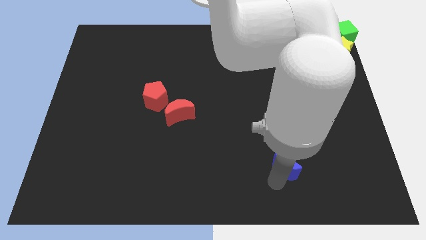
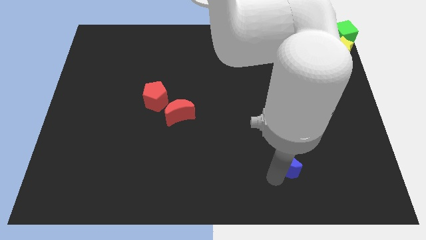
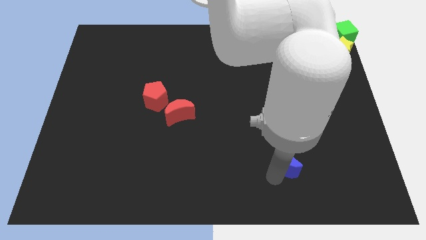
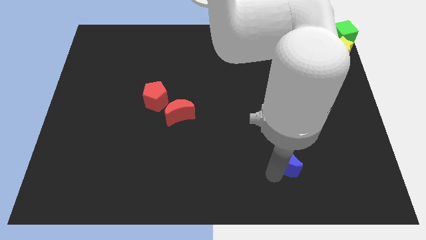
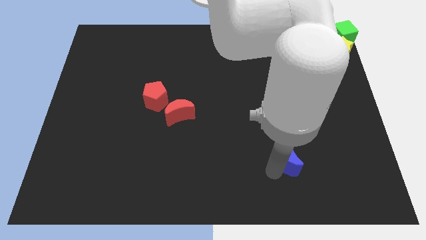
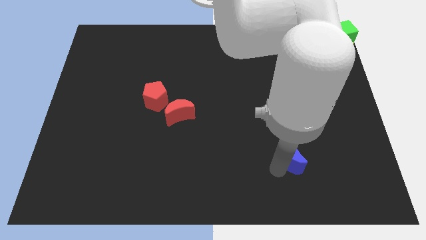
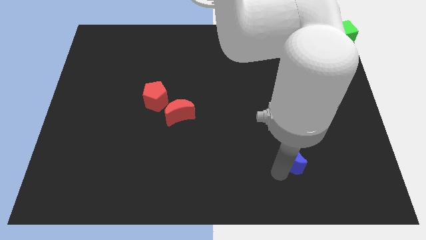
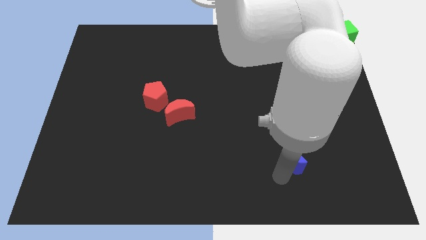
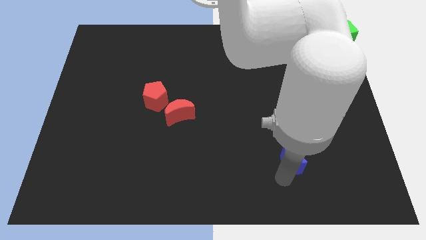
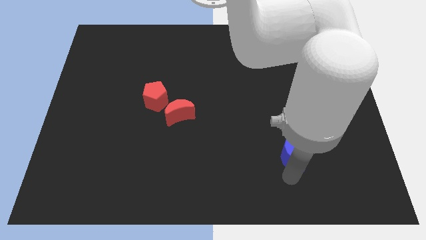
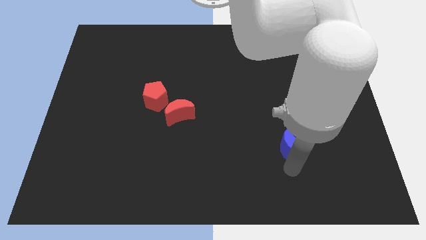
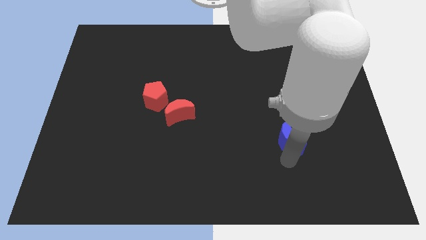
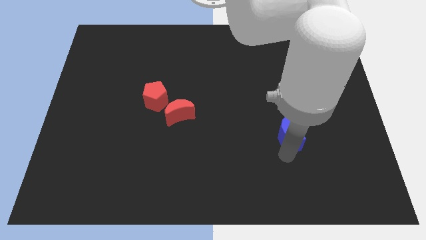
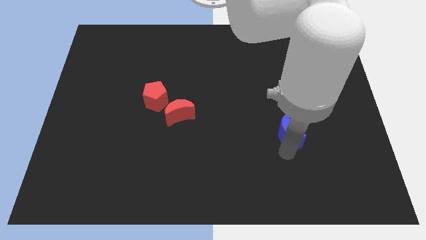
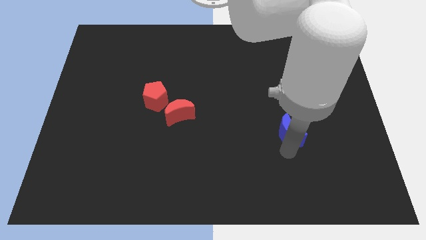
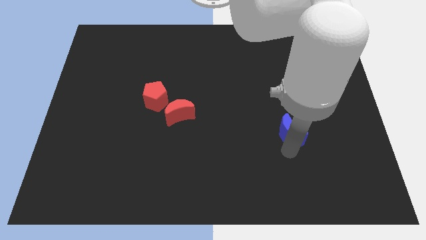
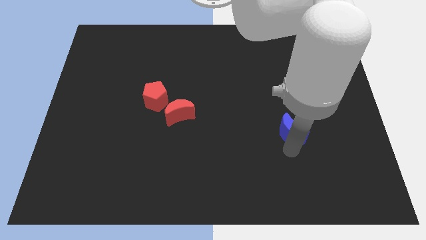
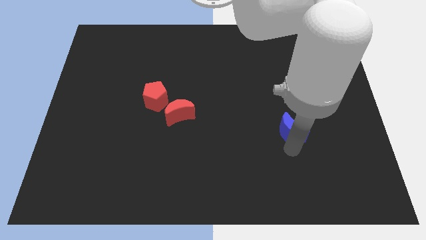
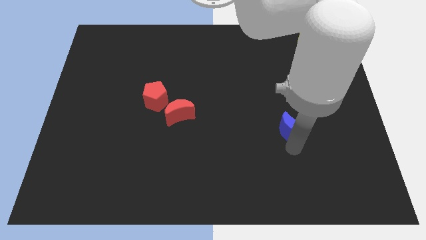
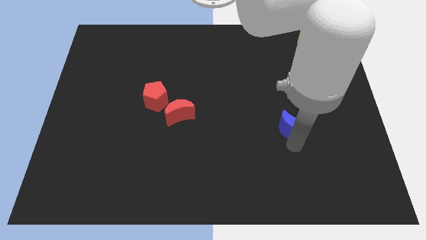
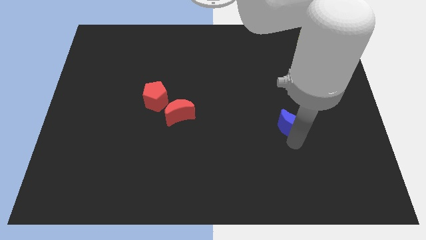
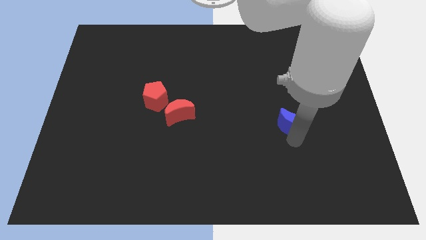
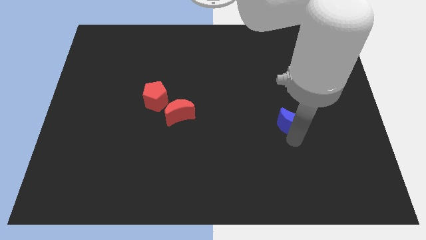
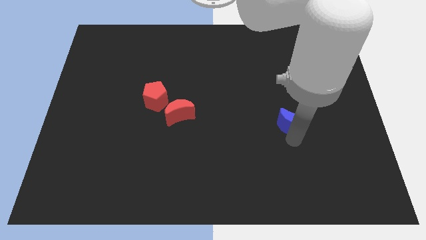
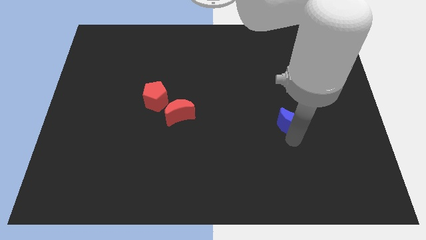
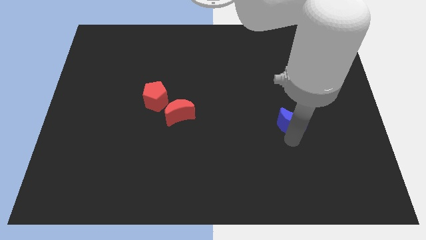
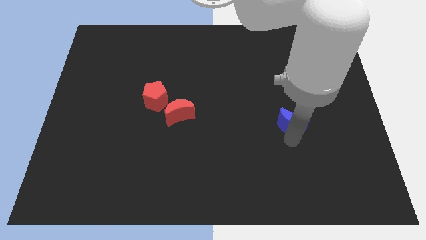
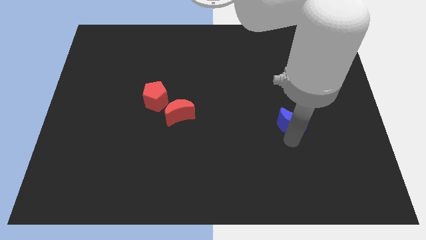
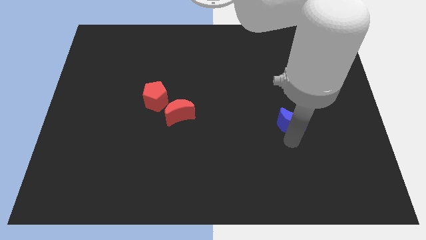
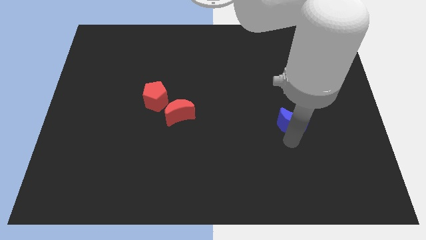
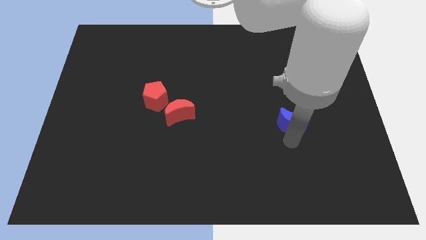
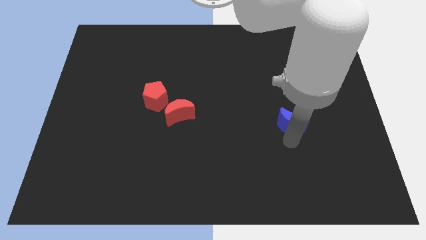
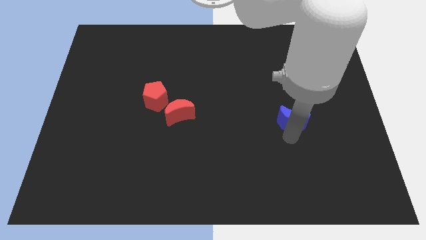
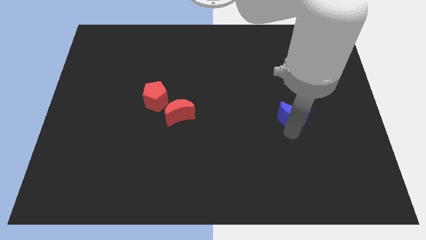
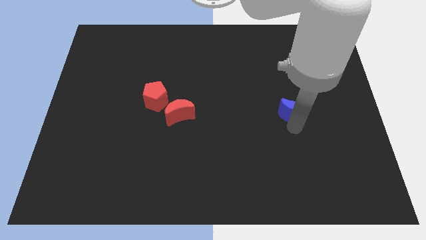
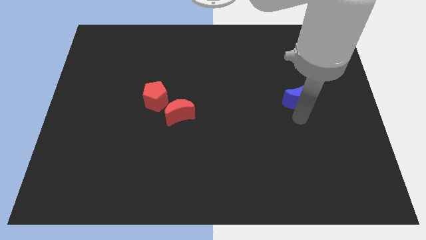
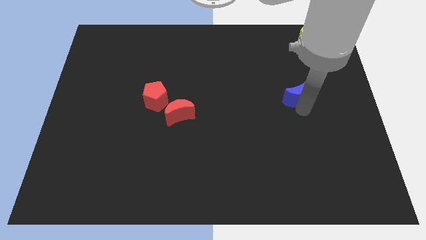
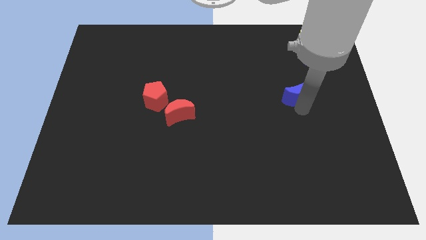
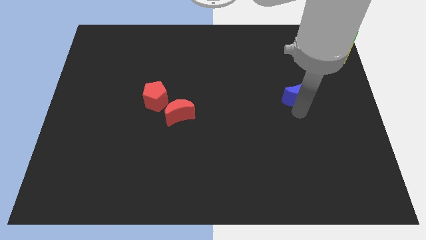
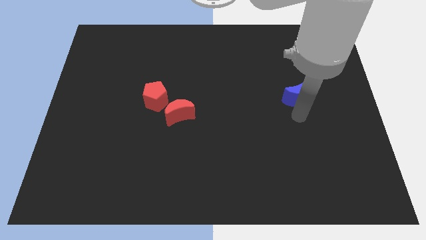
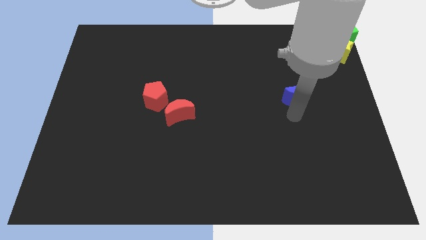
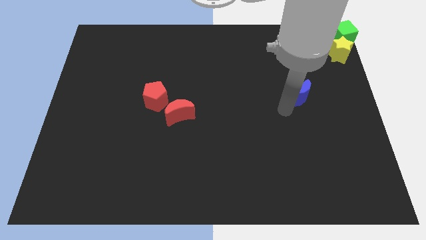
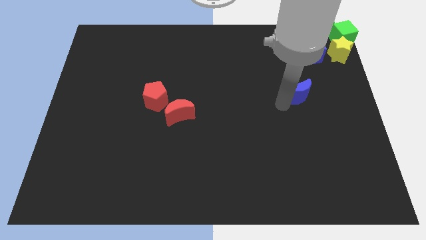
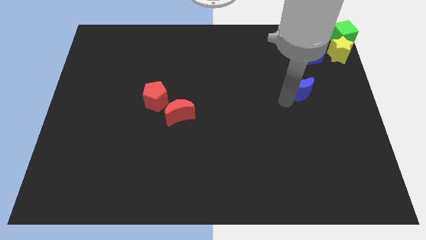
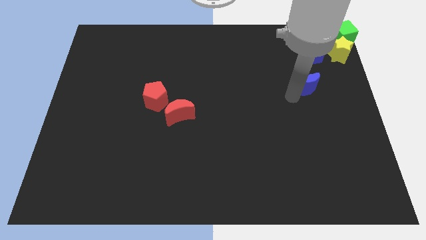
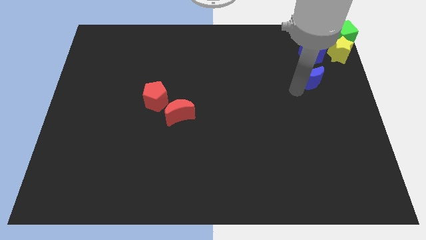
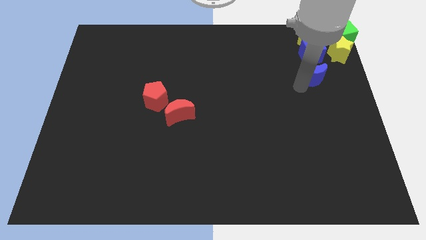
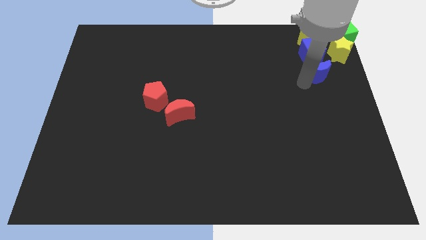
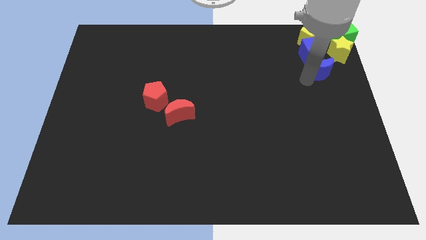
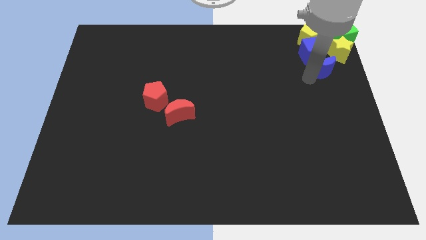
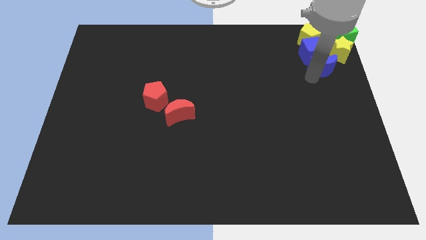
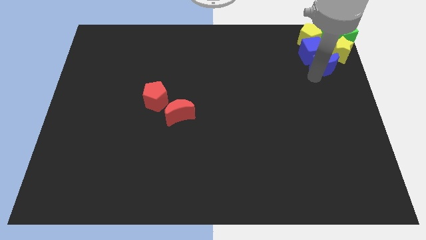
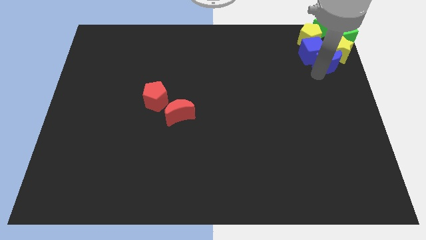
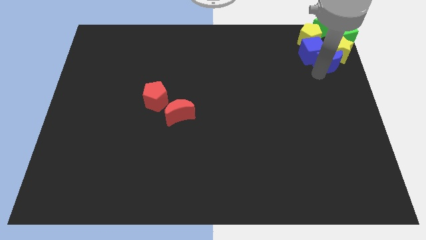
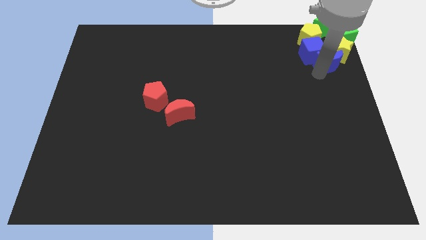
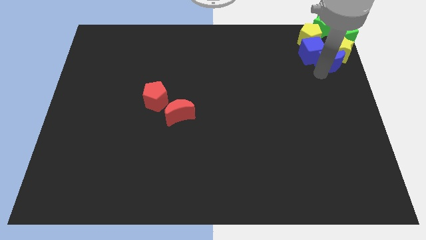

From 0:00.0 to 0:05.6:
push the blue moon into group of objects

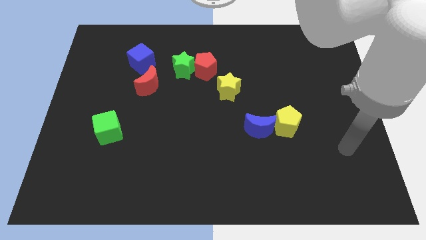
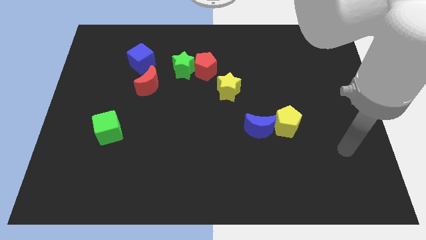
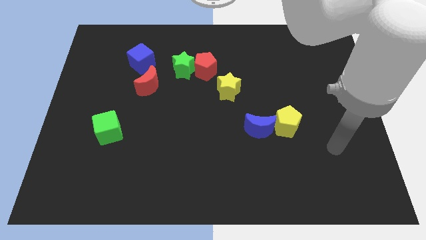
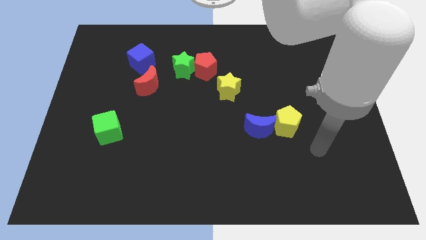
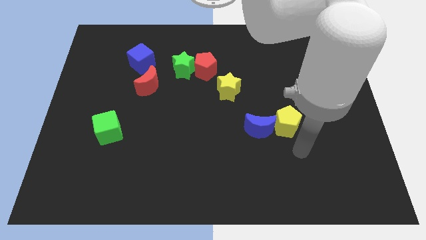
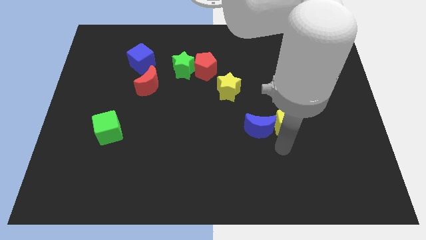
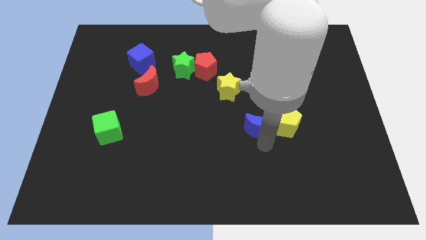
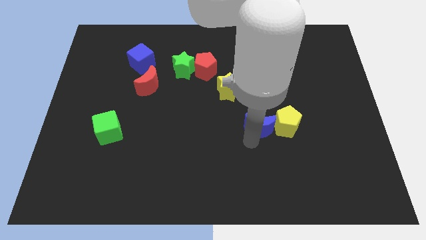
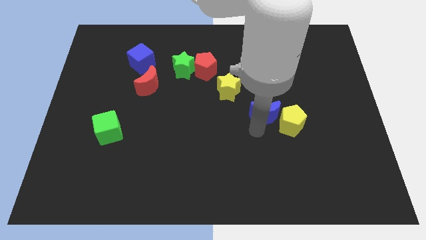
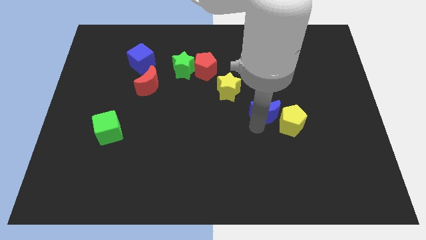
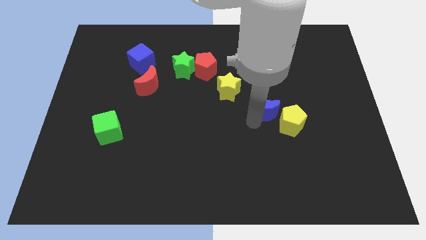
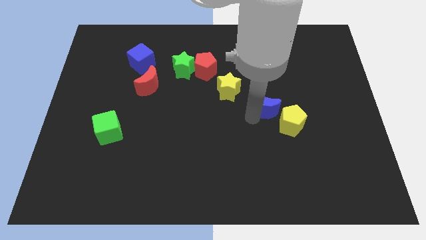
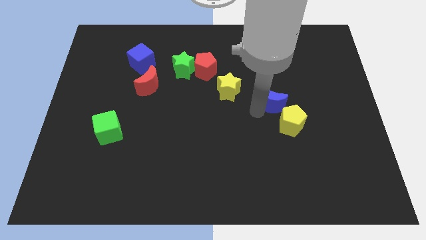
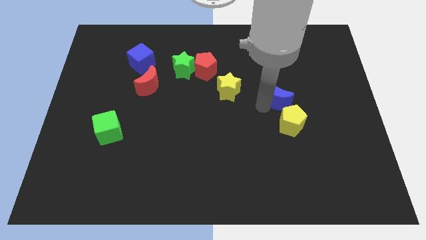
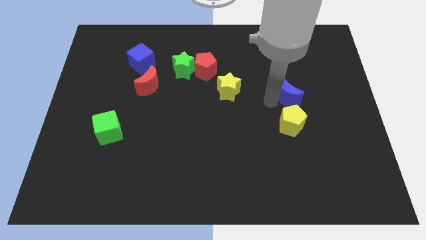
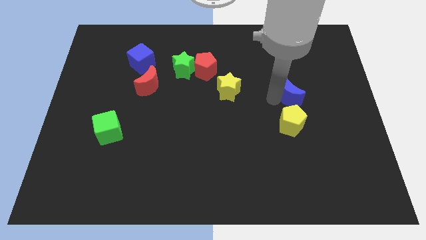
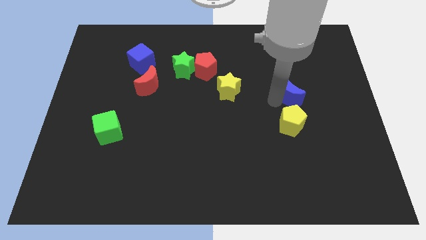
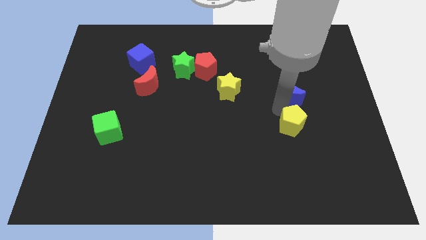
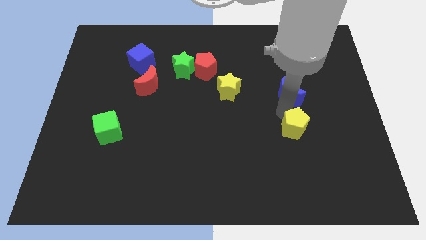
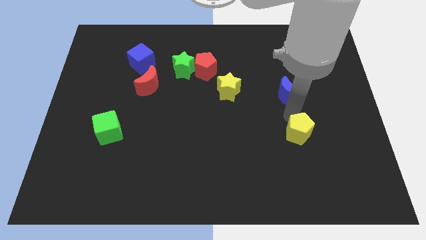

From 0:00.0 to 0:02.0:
move the blue moon above the yellow pentagon

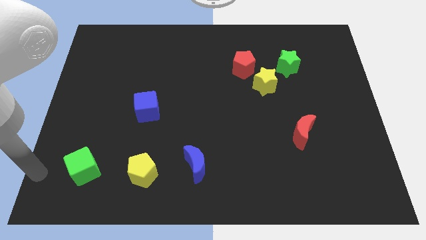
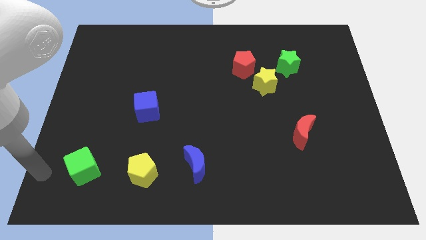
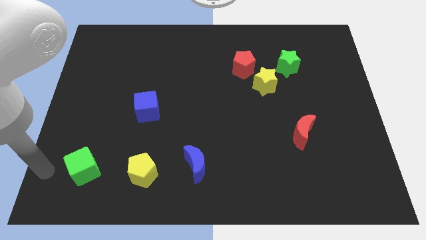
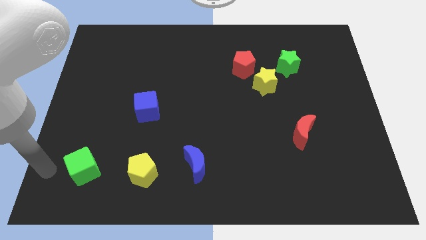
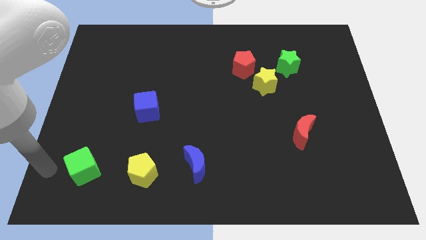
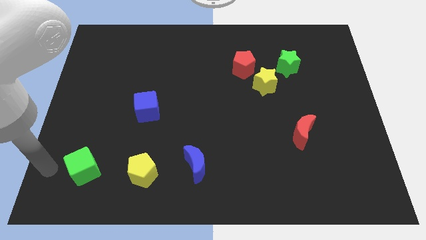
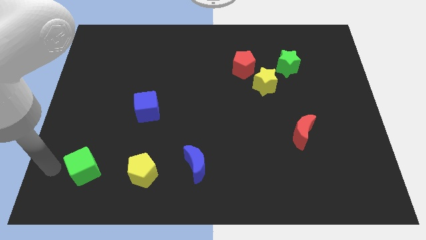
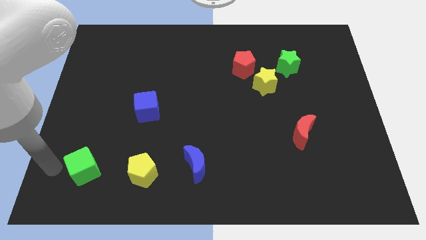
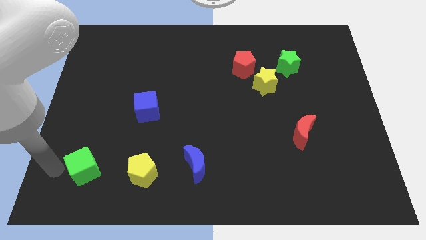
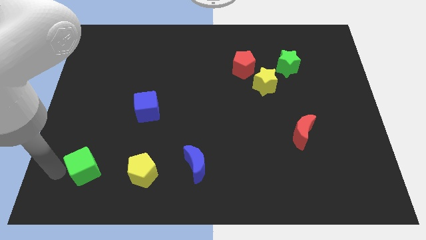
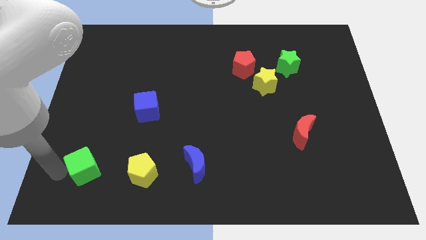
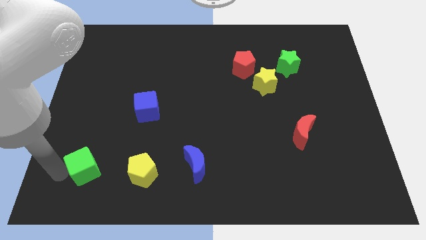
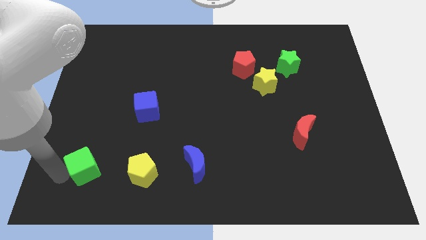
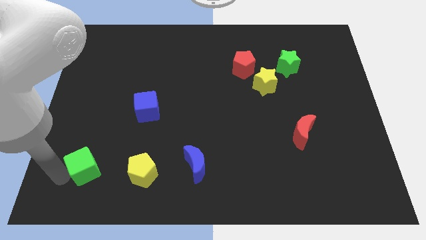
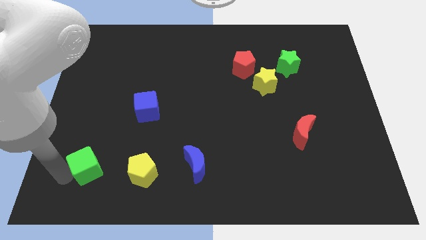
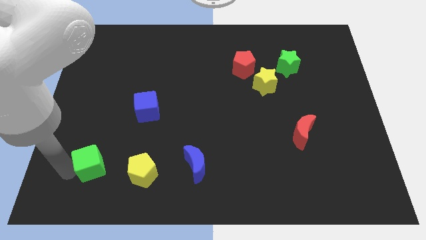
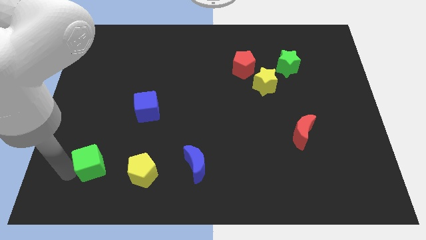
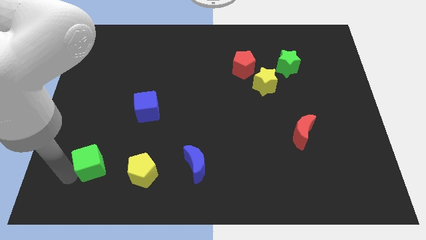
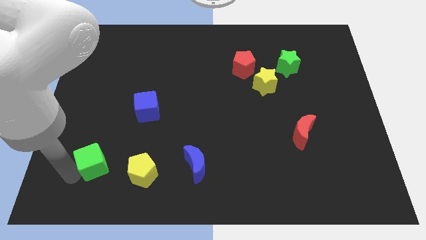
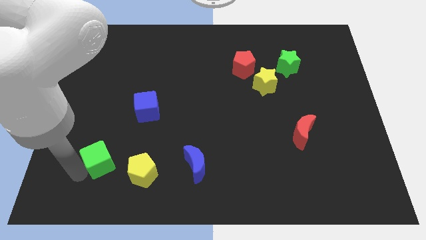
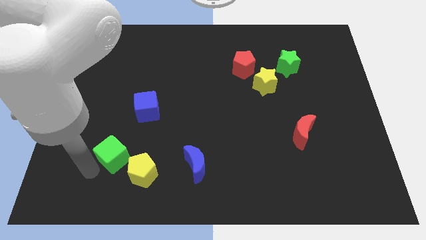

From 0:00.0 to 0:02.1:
push the green cube slightly to the right
